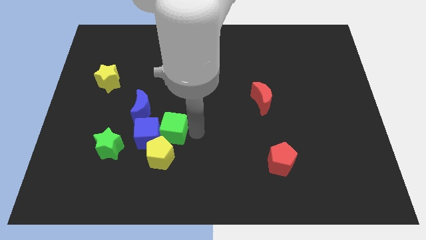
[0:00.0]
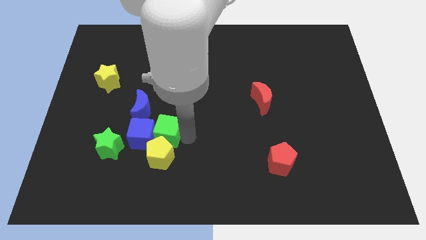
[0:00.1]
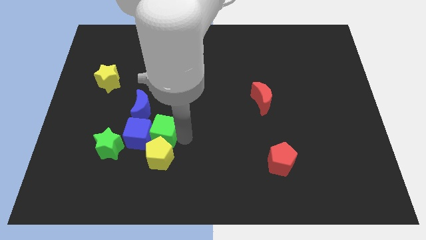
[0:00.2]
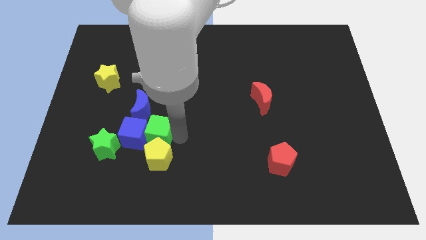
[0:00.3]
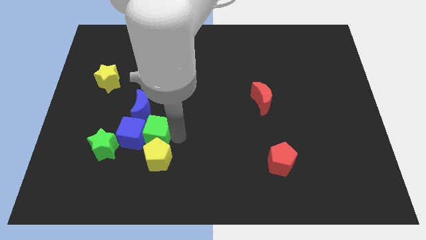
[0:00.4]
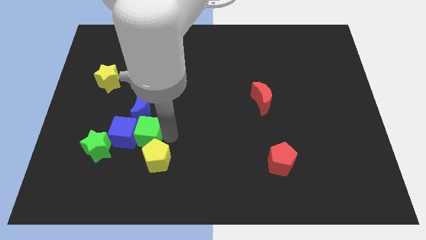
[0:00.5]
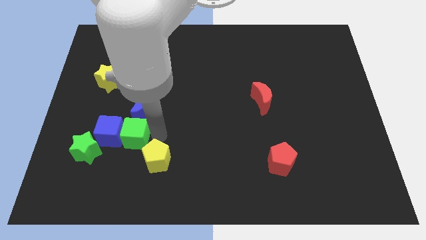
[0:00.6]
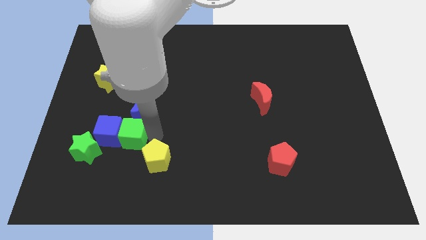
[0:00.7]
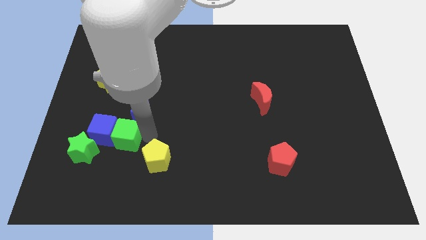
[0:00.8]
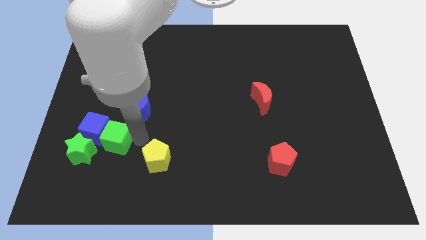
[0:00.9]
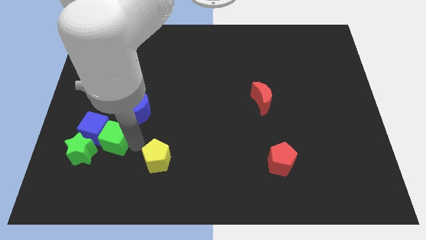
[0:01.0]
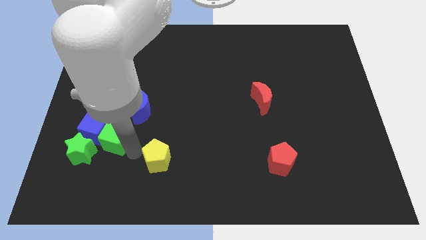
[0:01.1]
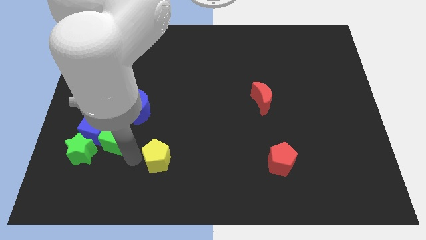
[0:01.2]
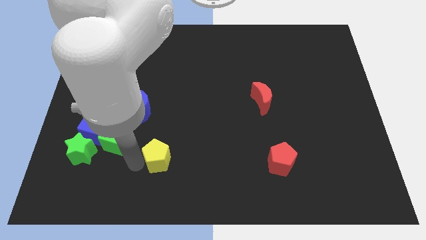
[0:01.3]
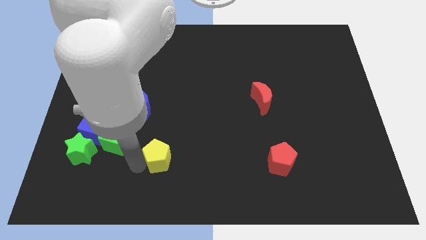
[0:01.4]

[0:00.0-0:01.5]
push the green cube into blue cube

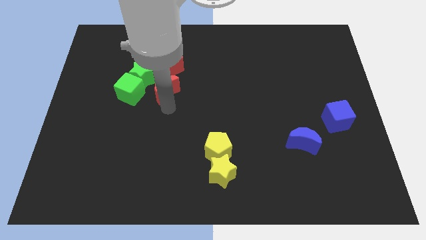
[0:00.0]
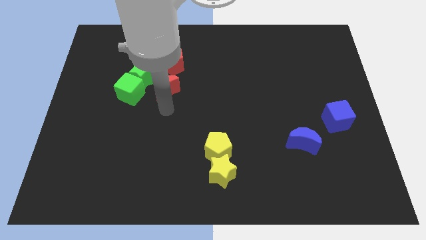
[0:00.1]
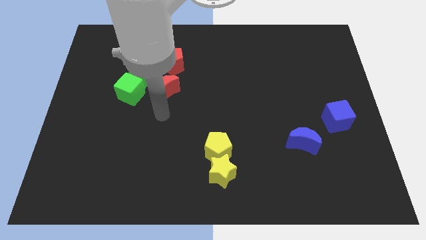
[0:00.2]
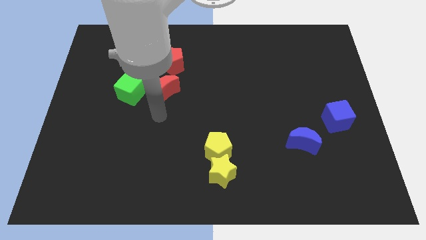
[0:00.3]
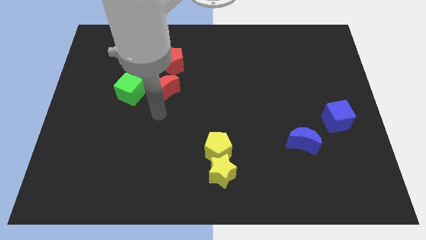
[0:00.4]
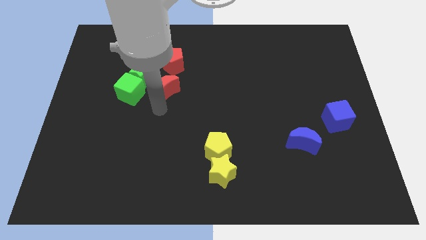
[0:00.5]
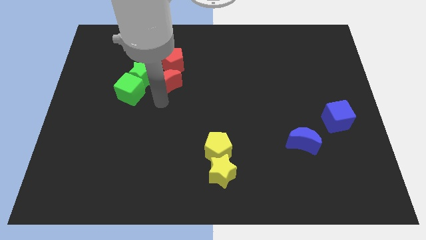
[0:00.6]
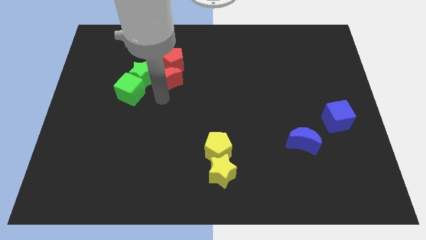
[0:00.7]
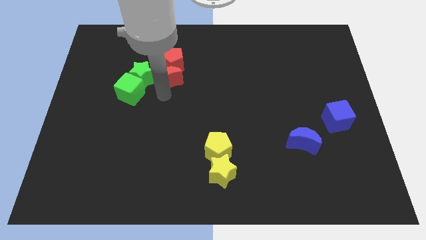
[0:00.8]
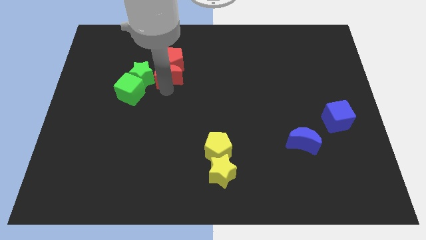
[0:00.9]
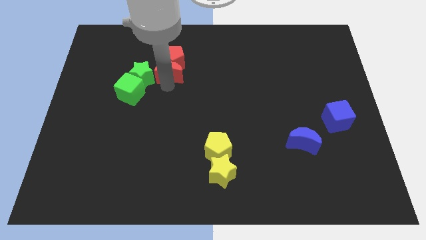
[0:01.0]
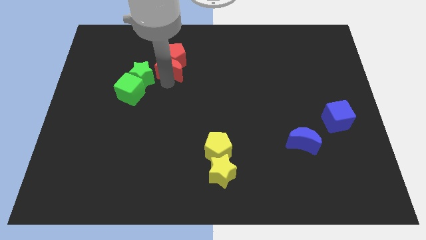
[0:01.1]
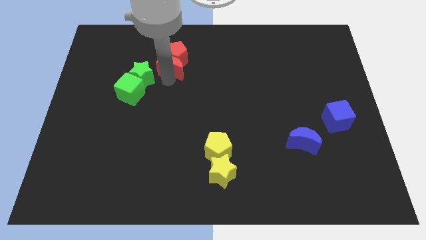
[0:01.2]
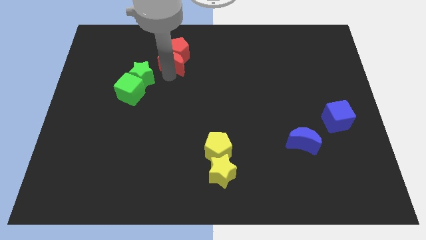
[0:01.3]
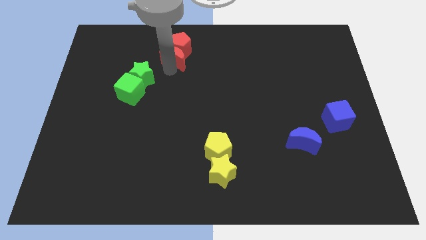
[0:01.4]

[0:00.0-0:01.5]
push the red crescent towards the red pentagon

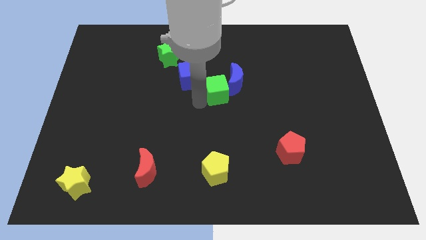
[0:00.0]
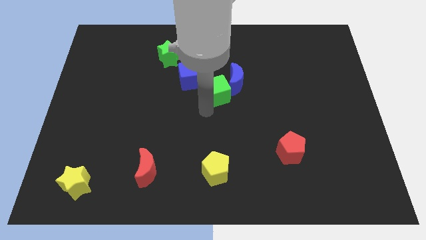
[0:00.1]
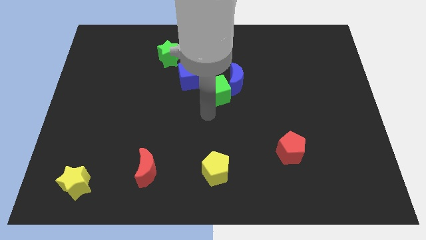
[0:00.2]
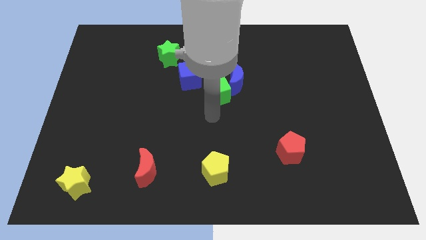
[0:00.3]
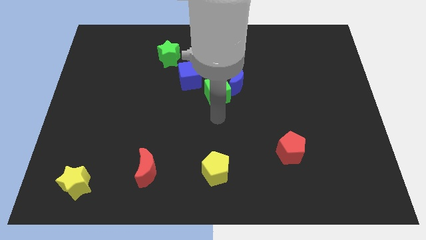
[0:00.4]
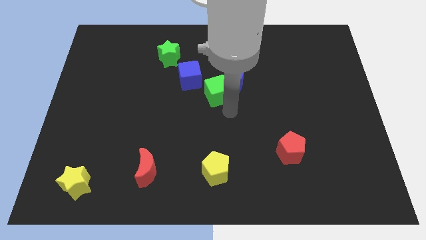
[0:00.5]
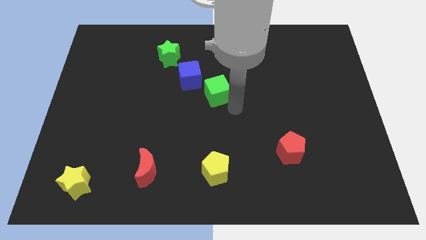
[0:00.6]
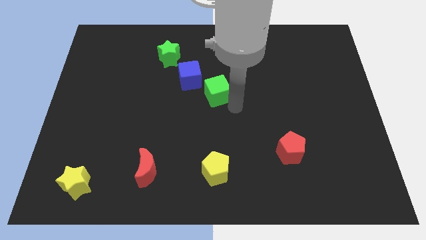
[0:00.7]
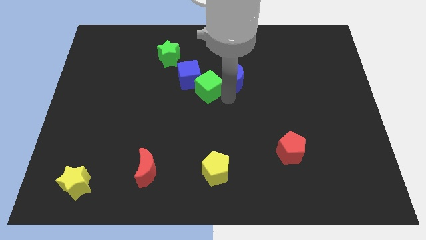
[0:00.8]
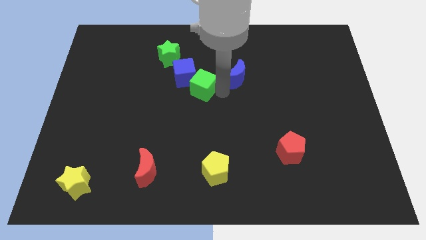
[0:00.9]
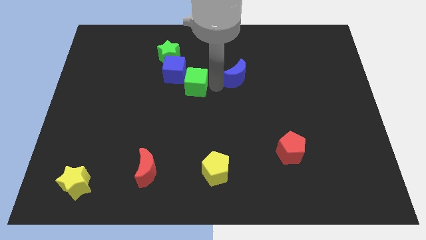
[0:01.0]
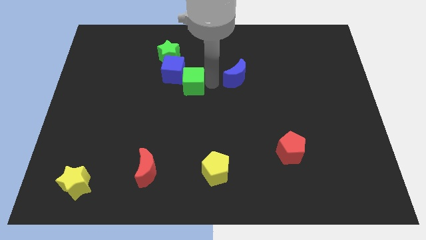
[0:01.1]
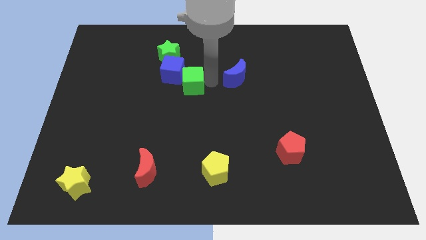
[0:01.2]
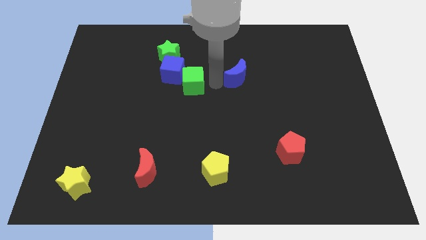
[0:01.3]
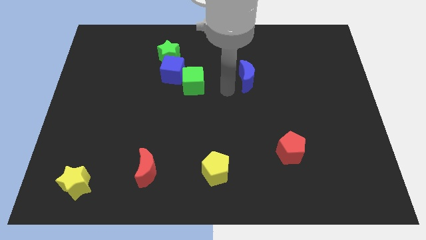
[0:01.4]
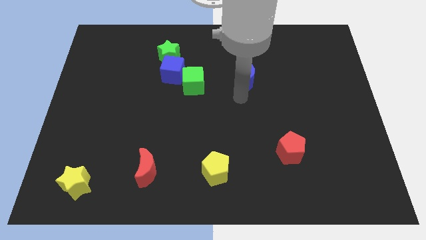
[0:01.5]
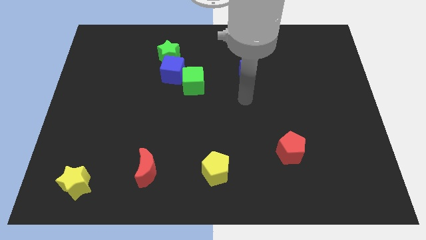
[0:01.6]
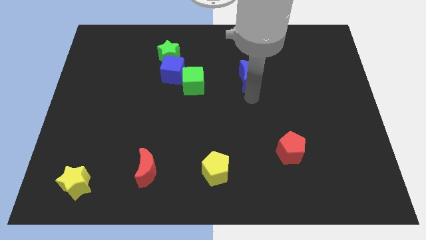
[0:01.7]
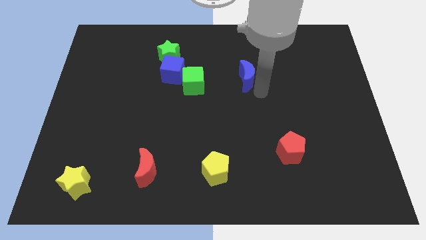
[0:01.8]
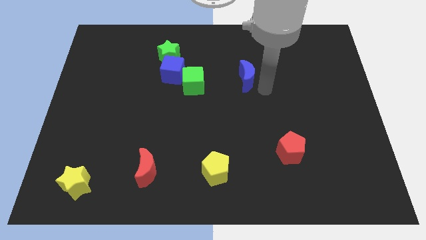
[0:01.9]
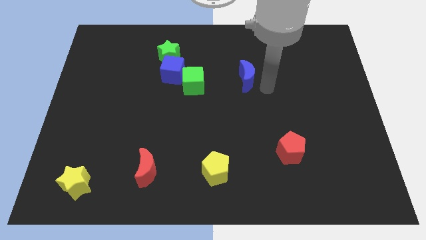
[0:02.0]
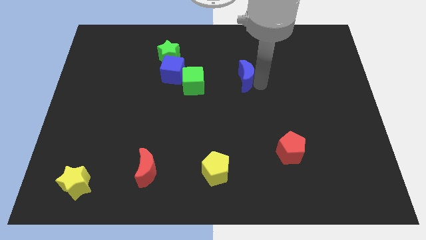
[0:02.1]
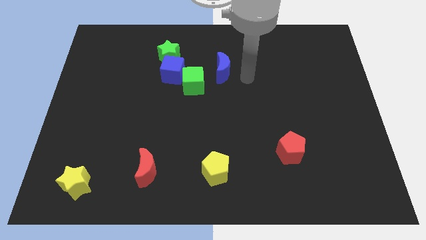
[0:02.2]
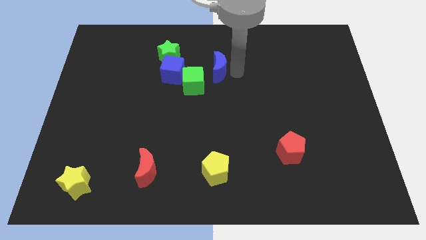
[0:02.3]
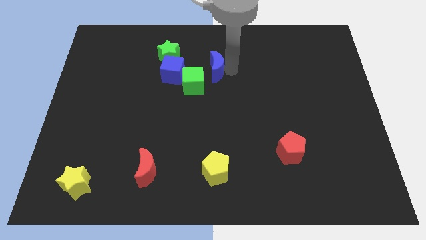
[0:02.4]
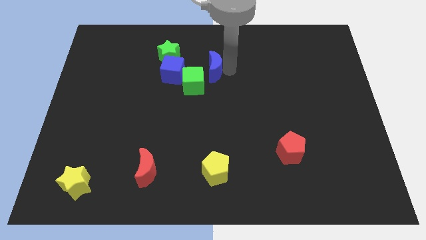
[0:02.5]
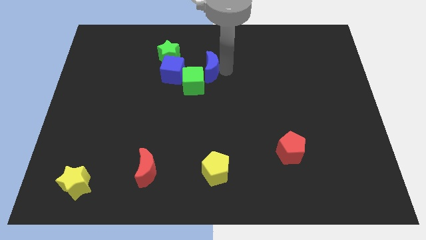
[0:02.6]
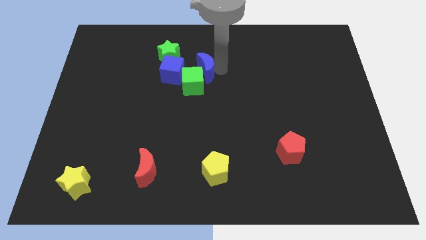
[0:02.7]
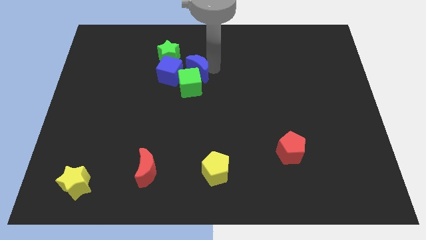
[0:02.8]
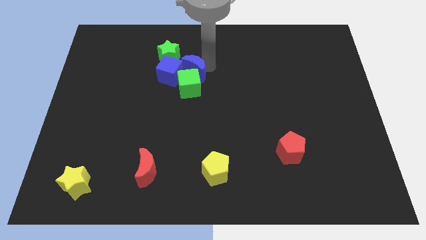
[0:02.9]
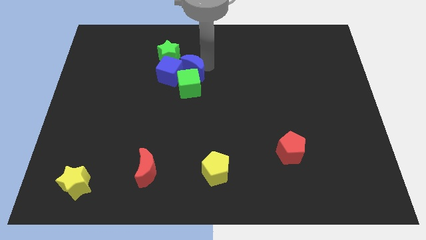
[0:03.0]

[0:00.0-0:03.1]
place blue crescent beside blue cube

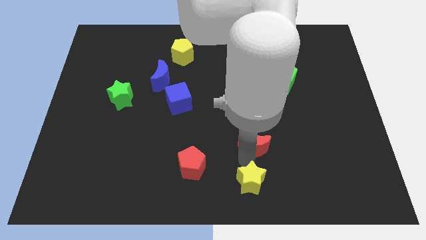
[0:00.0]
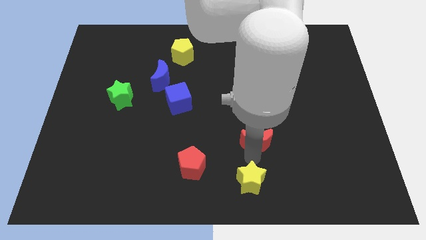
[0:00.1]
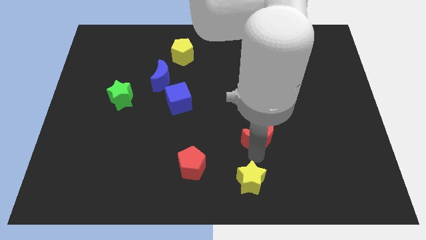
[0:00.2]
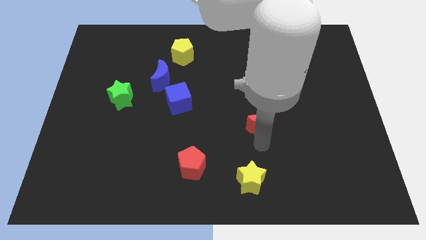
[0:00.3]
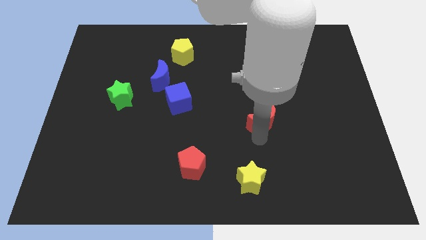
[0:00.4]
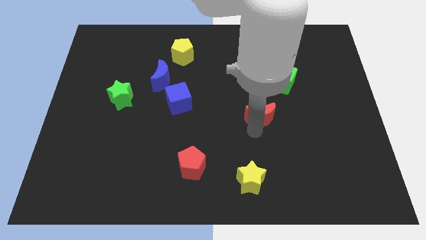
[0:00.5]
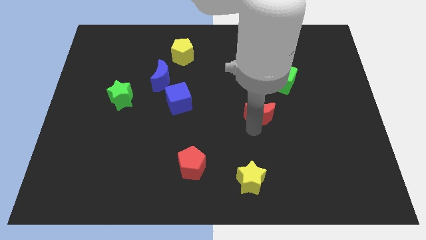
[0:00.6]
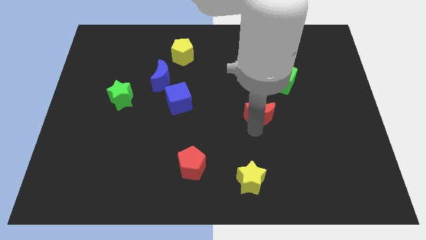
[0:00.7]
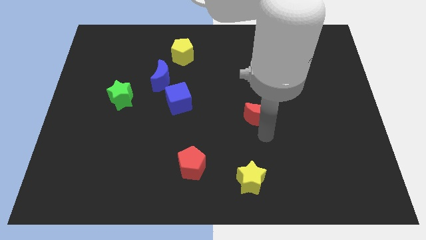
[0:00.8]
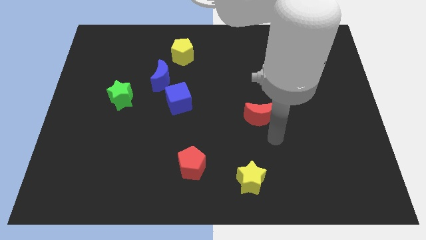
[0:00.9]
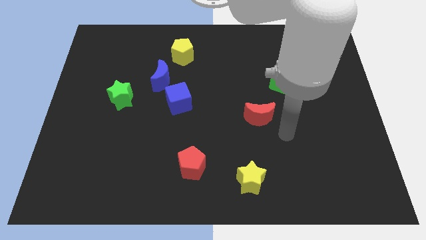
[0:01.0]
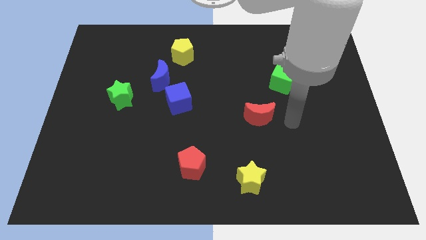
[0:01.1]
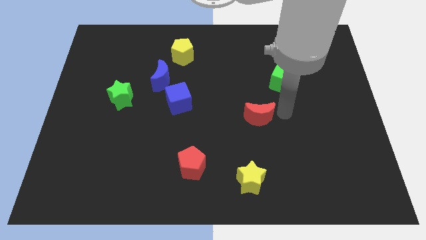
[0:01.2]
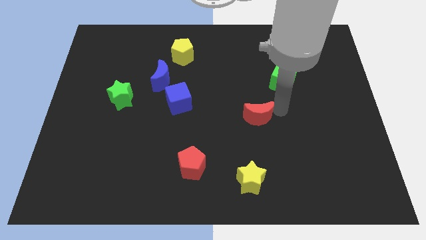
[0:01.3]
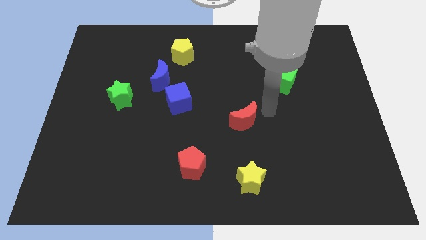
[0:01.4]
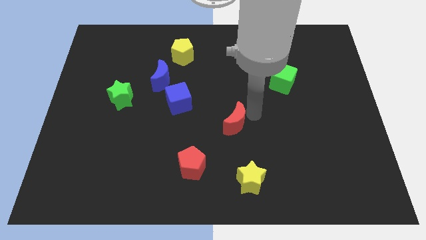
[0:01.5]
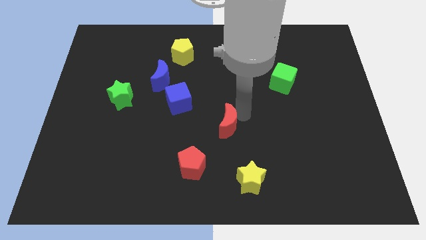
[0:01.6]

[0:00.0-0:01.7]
move the red crescent to the top right diagonally to the red pentagon

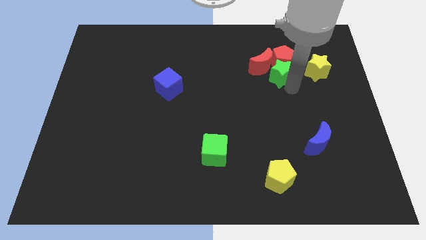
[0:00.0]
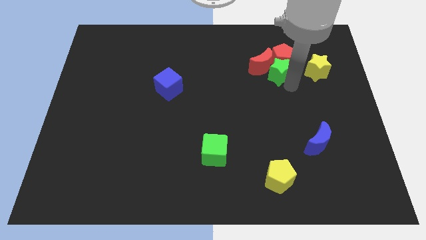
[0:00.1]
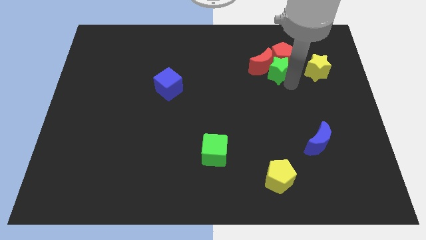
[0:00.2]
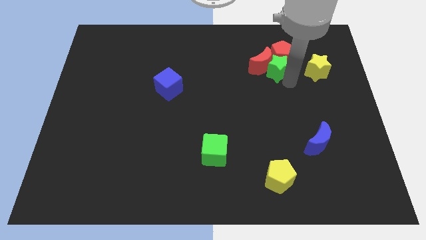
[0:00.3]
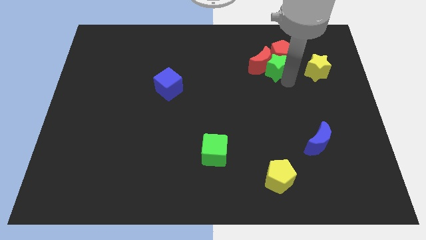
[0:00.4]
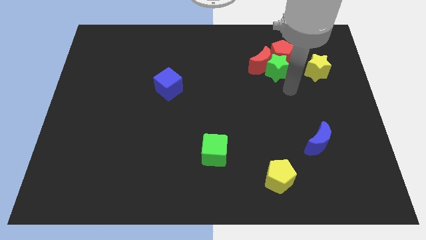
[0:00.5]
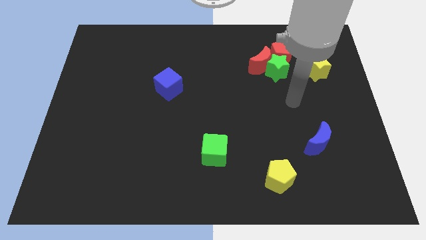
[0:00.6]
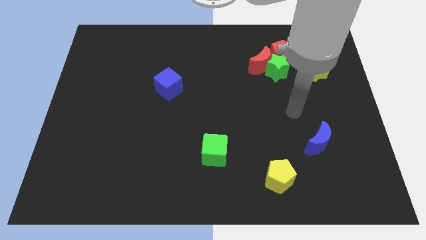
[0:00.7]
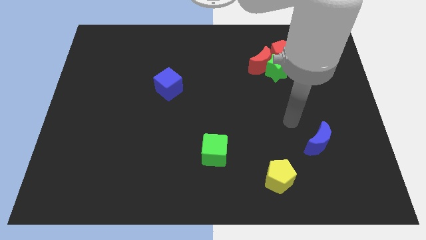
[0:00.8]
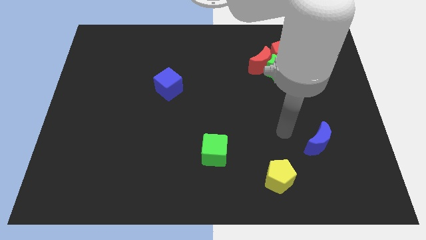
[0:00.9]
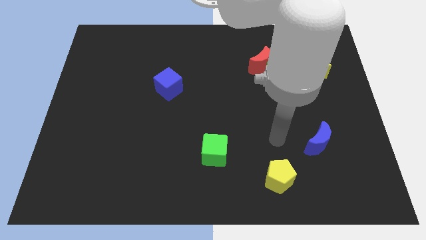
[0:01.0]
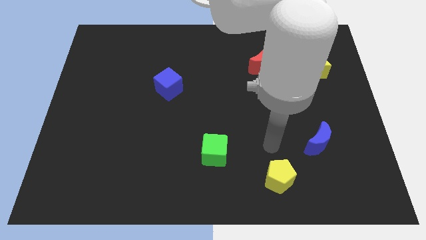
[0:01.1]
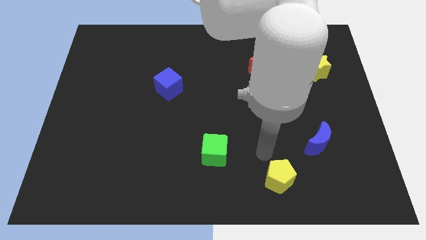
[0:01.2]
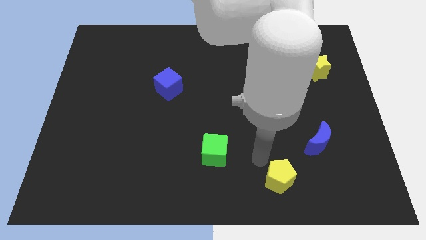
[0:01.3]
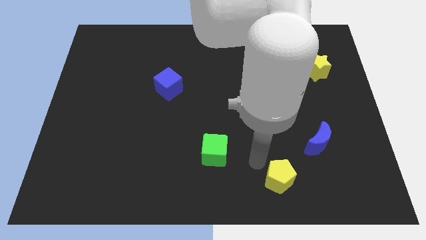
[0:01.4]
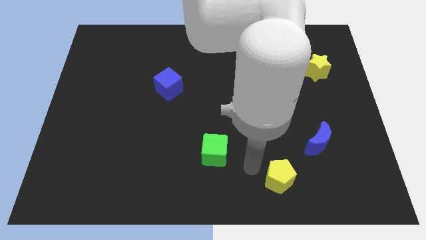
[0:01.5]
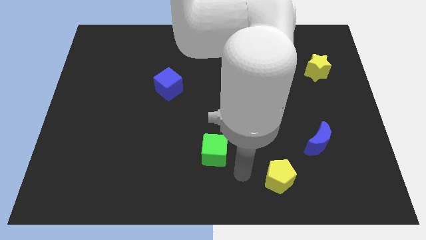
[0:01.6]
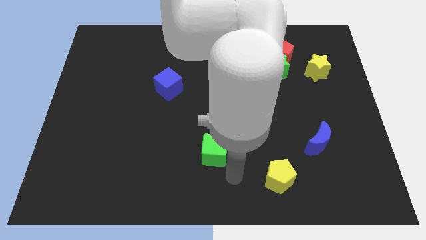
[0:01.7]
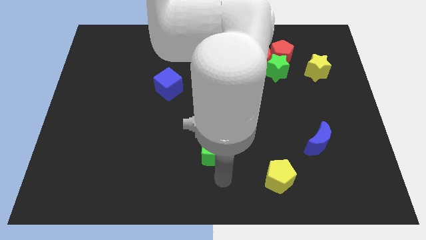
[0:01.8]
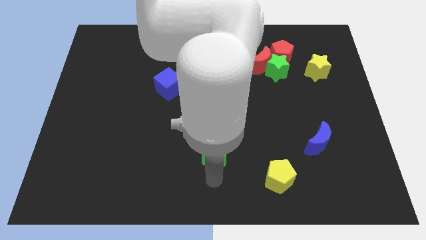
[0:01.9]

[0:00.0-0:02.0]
move the arm vertically below the green cube
